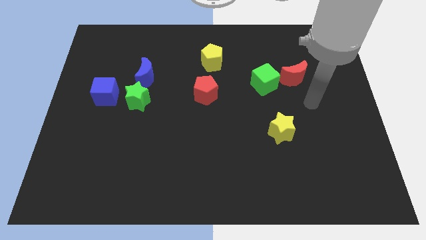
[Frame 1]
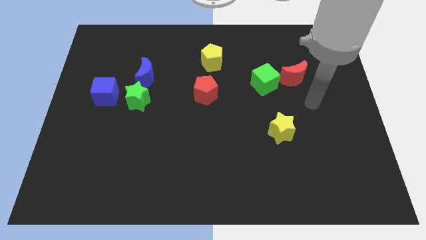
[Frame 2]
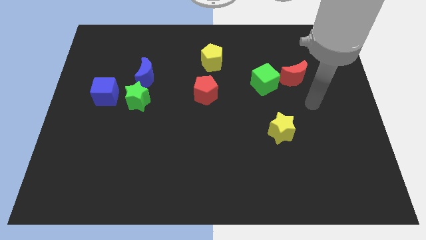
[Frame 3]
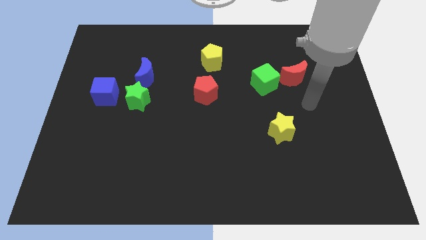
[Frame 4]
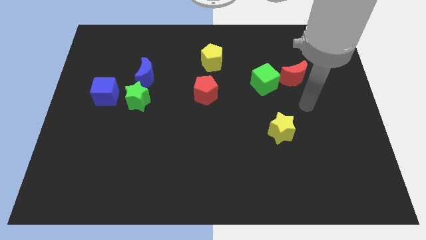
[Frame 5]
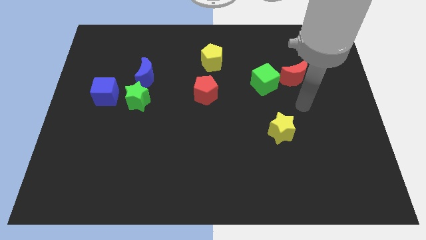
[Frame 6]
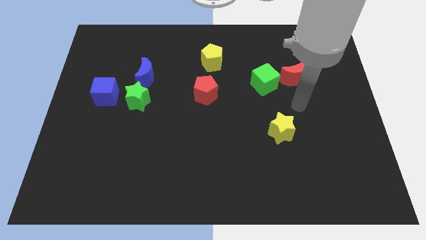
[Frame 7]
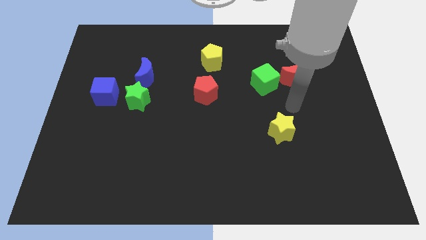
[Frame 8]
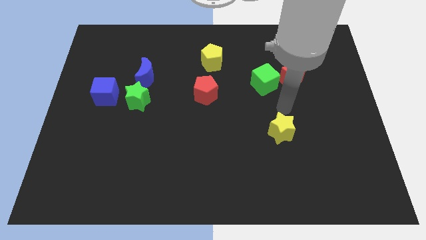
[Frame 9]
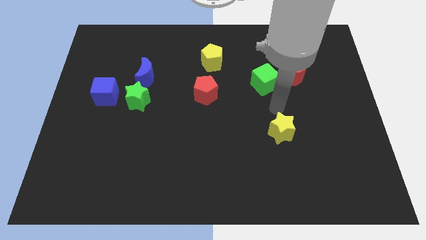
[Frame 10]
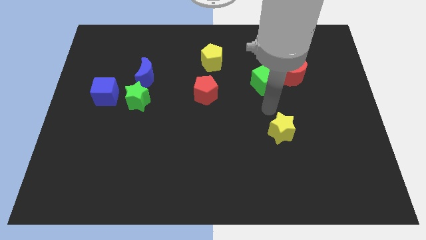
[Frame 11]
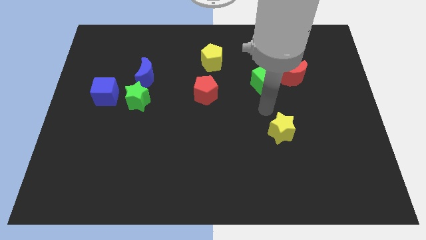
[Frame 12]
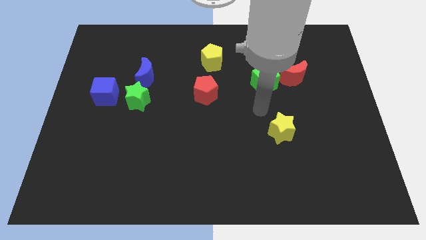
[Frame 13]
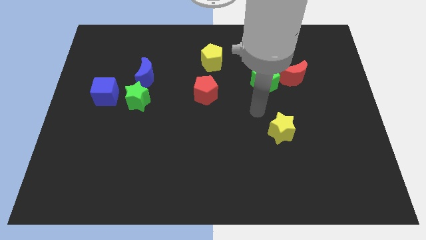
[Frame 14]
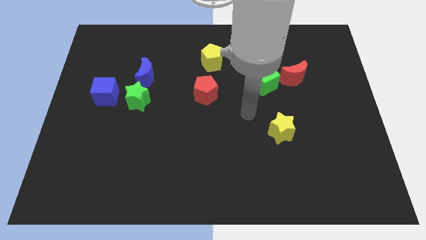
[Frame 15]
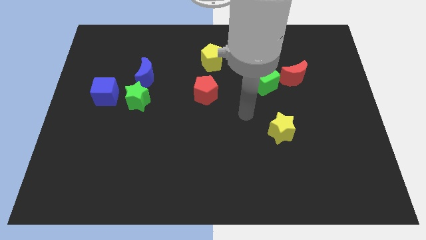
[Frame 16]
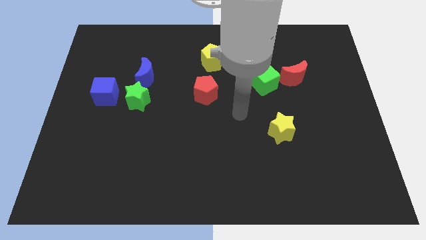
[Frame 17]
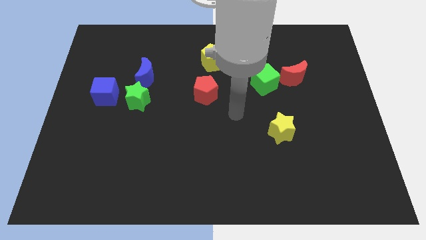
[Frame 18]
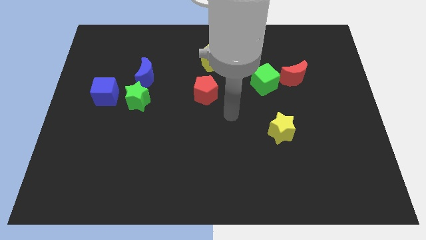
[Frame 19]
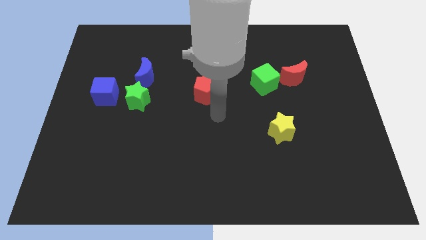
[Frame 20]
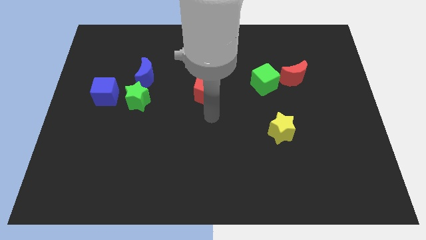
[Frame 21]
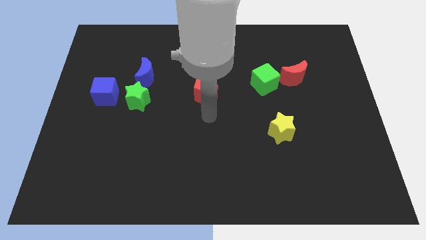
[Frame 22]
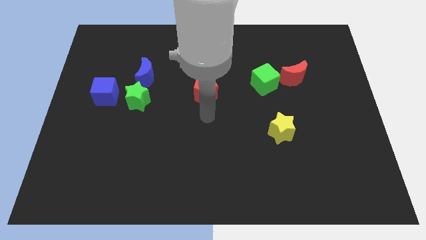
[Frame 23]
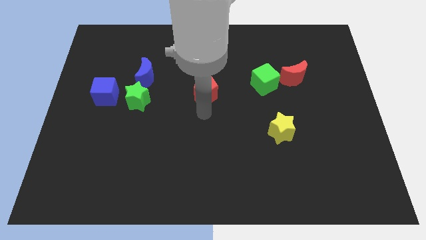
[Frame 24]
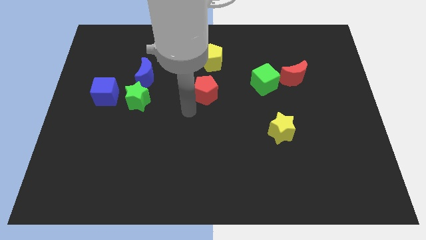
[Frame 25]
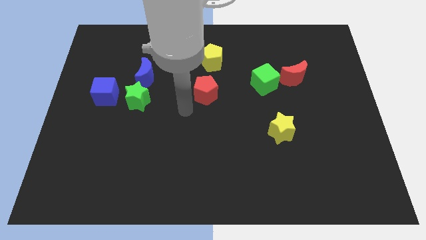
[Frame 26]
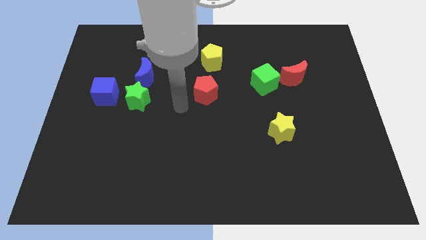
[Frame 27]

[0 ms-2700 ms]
place your arm between the red pentagon and green star

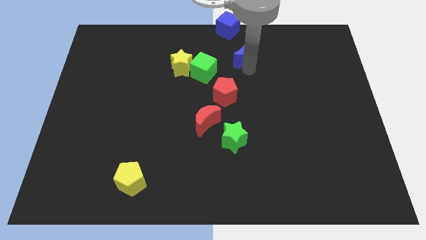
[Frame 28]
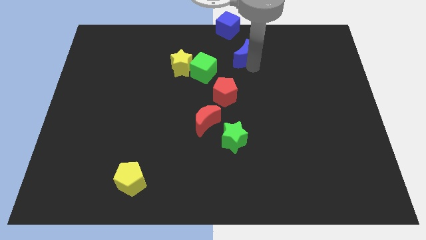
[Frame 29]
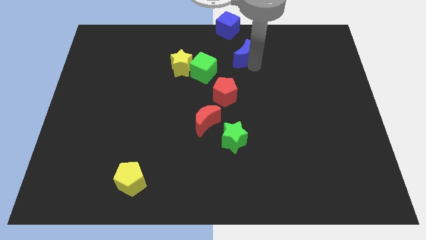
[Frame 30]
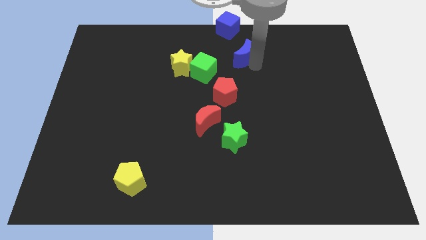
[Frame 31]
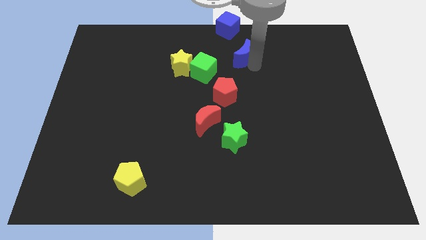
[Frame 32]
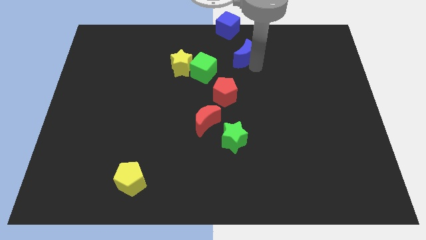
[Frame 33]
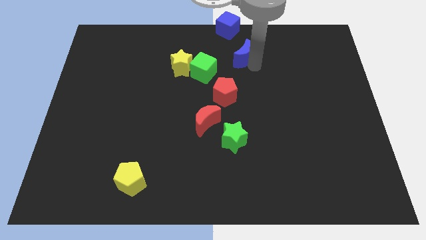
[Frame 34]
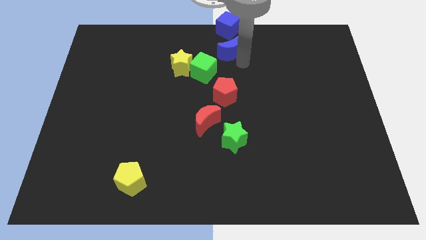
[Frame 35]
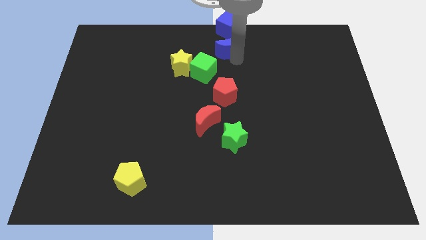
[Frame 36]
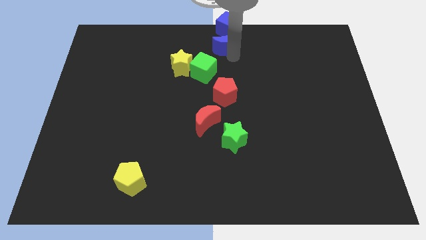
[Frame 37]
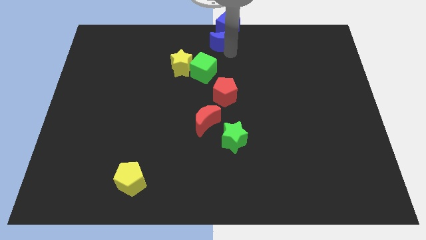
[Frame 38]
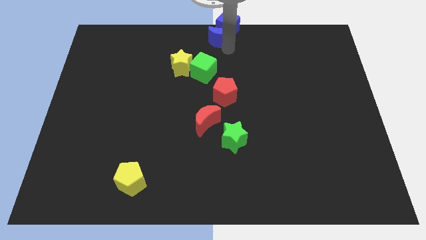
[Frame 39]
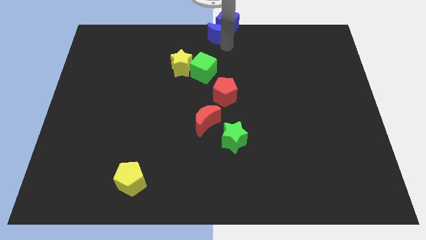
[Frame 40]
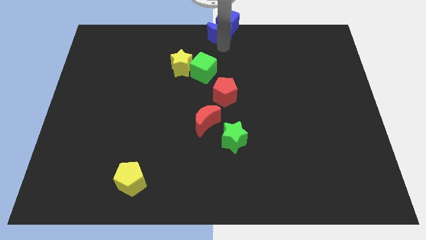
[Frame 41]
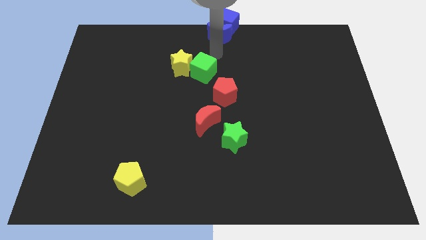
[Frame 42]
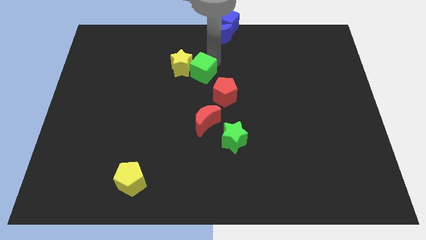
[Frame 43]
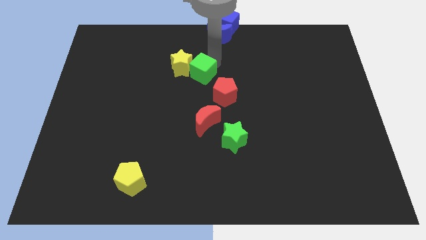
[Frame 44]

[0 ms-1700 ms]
place the blue moon in between the blue cube and green cube

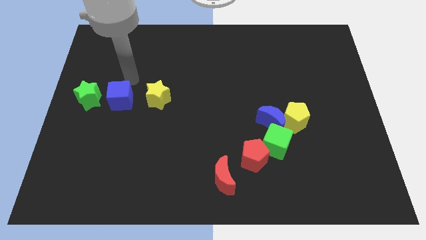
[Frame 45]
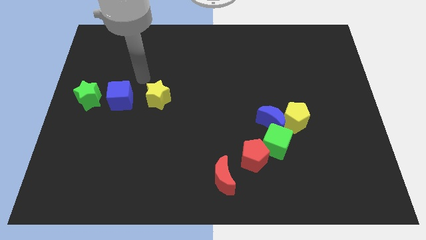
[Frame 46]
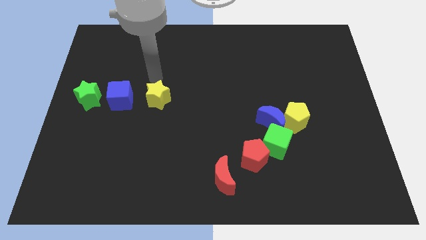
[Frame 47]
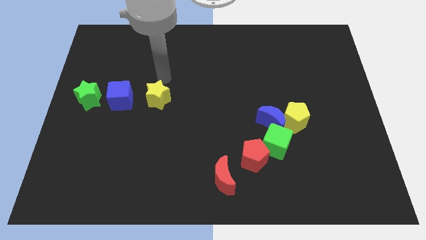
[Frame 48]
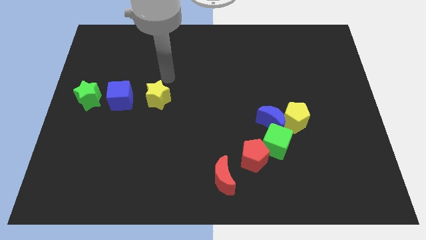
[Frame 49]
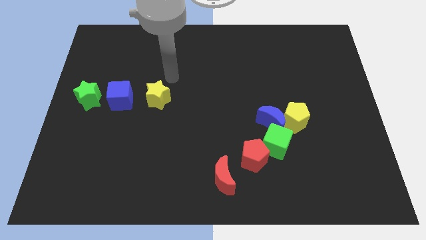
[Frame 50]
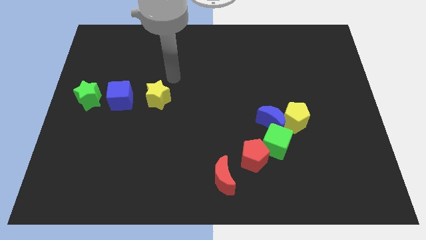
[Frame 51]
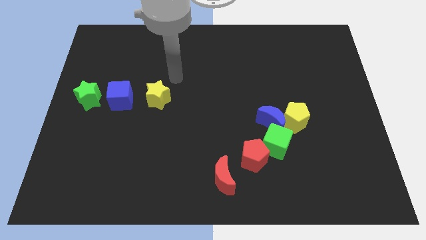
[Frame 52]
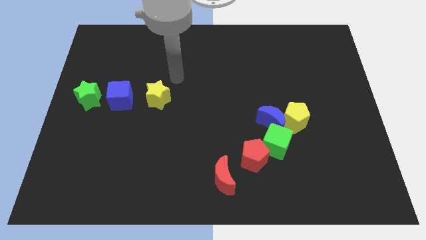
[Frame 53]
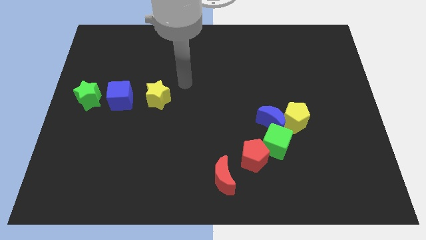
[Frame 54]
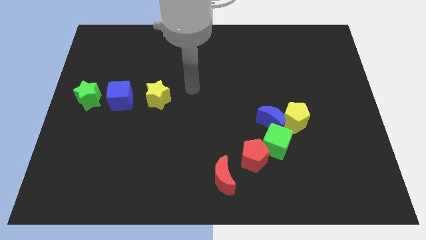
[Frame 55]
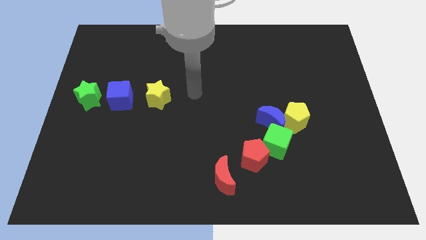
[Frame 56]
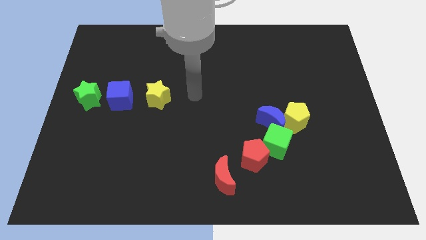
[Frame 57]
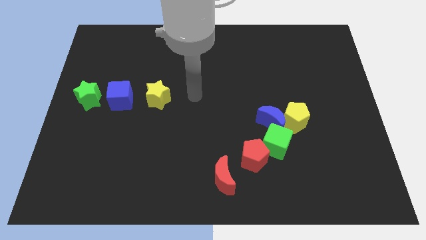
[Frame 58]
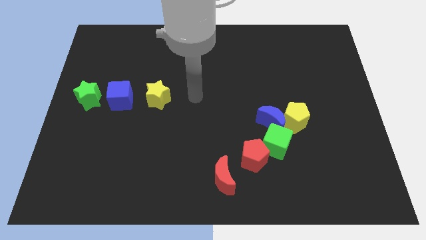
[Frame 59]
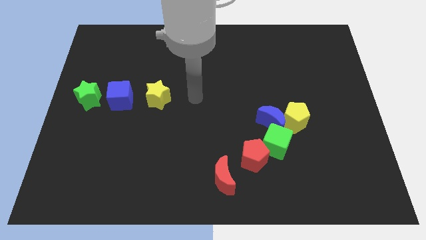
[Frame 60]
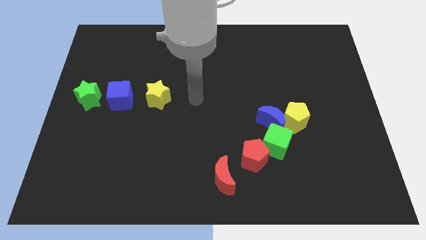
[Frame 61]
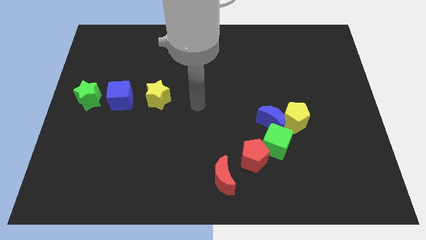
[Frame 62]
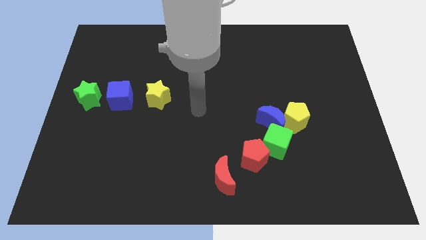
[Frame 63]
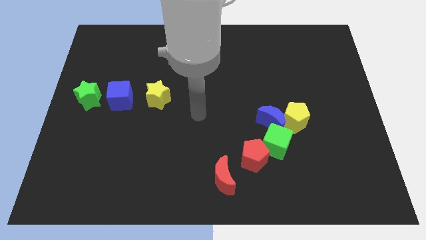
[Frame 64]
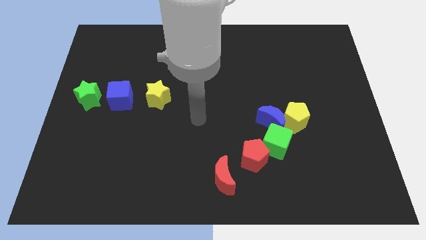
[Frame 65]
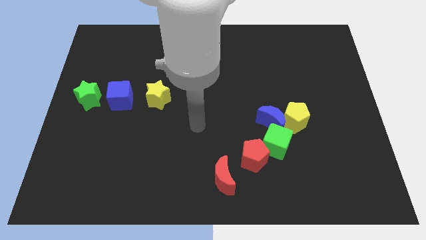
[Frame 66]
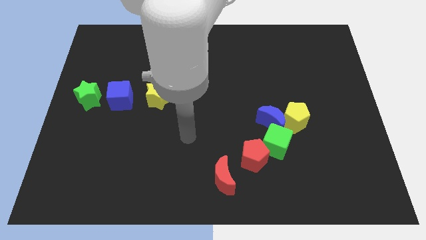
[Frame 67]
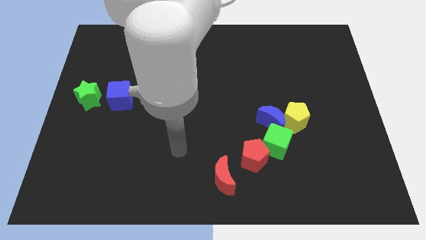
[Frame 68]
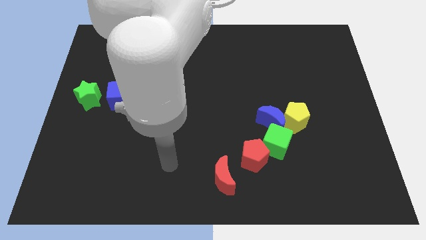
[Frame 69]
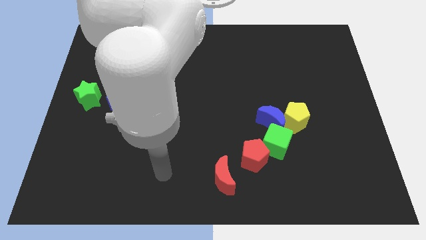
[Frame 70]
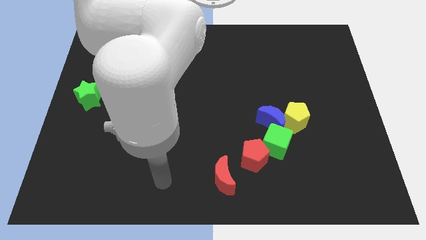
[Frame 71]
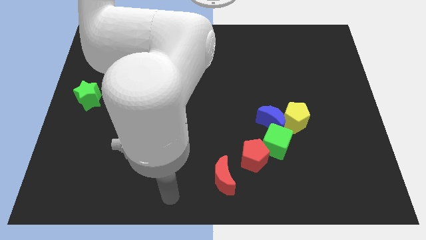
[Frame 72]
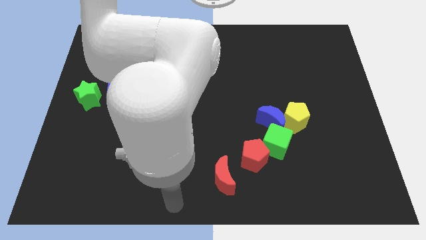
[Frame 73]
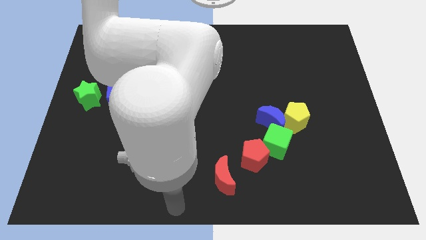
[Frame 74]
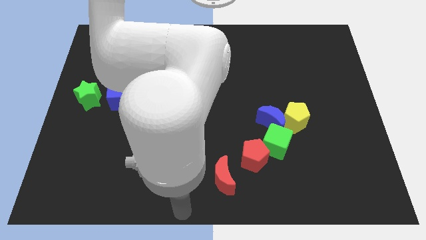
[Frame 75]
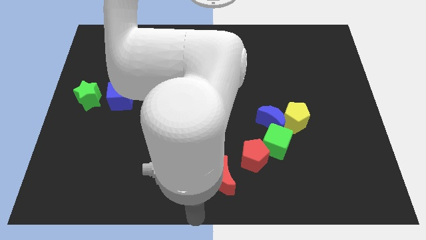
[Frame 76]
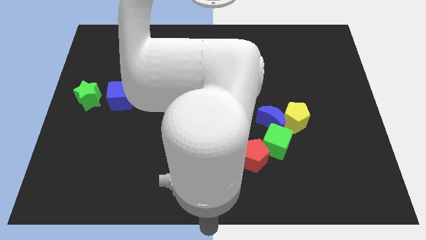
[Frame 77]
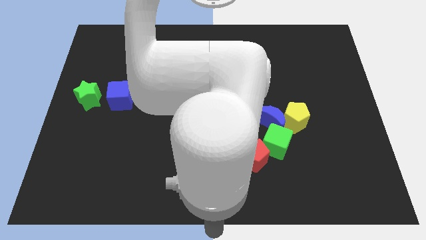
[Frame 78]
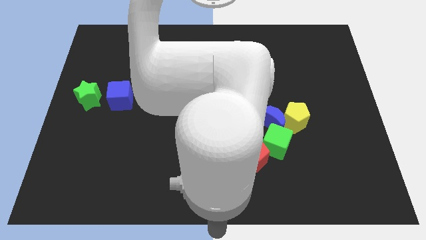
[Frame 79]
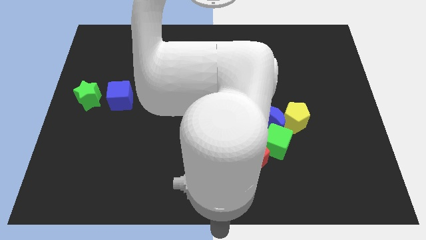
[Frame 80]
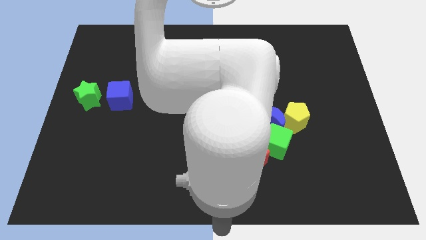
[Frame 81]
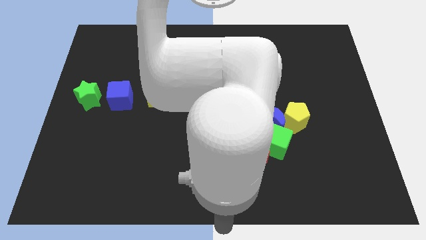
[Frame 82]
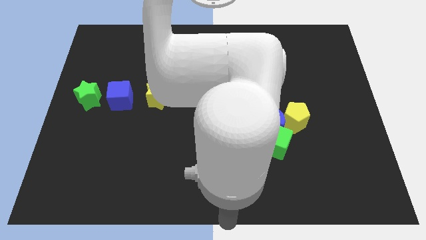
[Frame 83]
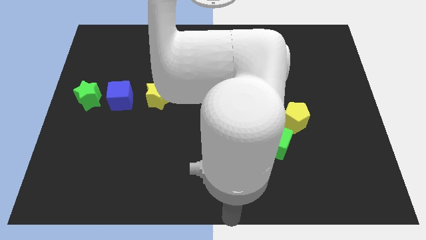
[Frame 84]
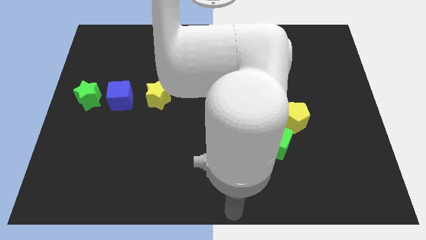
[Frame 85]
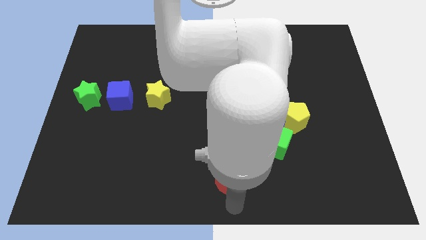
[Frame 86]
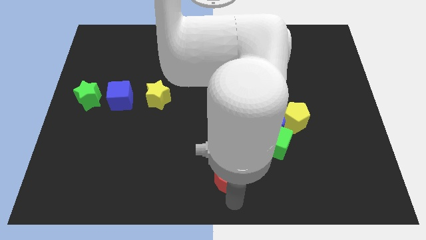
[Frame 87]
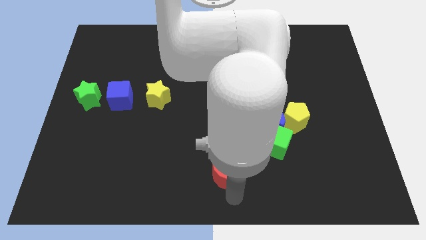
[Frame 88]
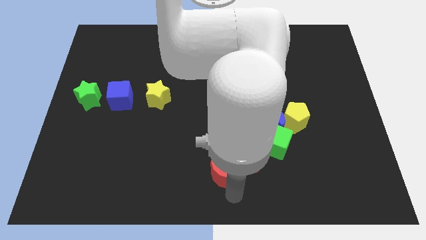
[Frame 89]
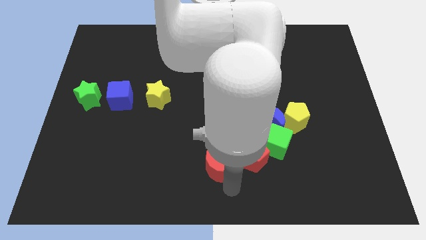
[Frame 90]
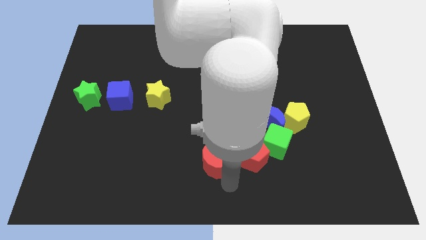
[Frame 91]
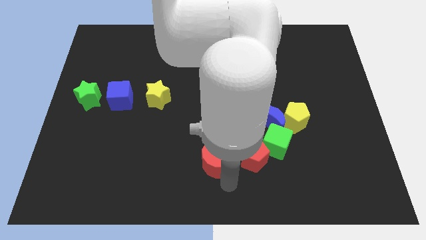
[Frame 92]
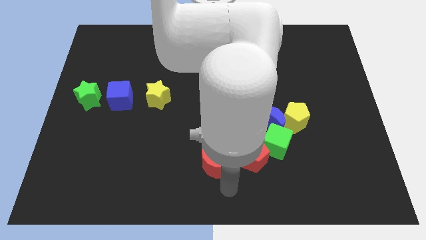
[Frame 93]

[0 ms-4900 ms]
adjust the red moon at the left side of the red pentagon
